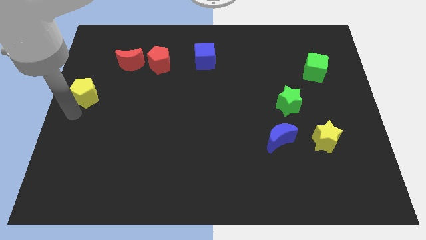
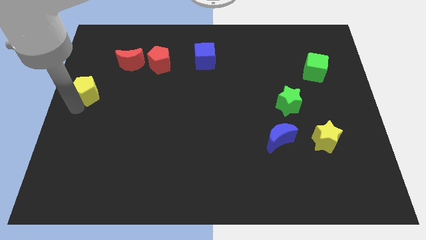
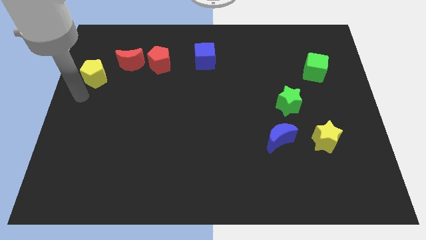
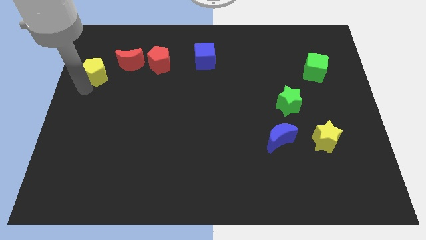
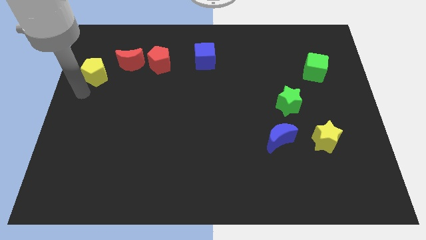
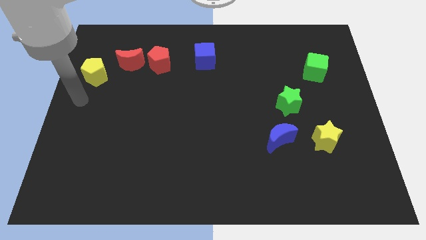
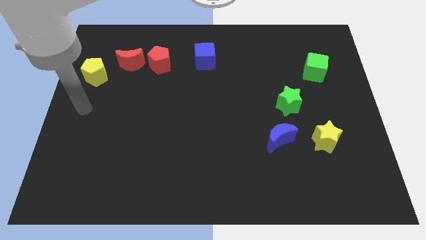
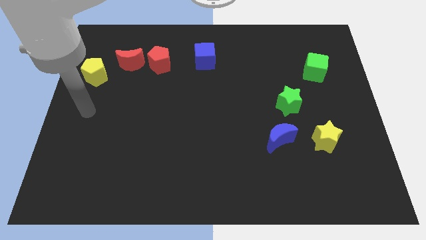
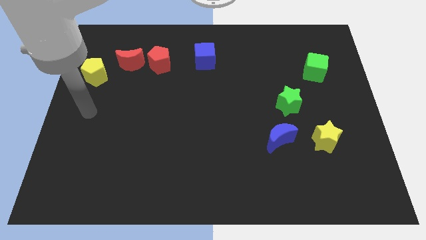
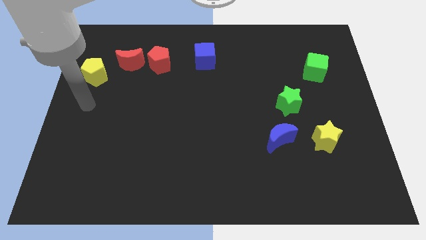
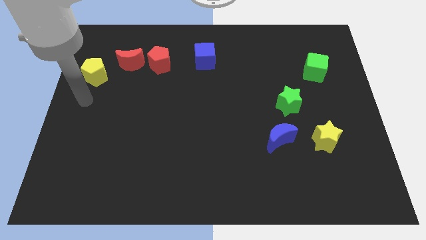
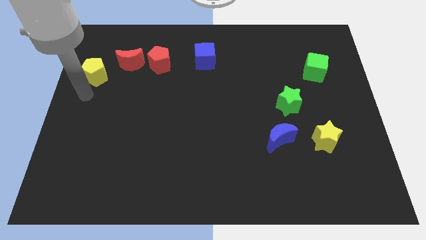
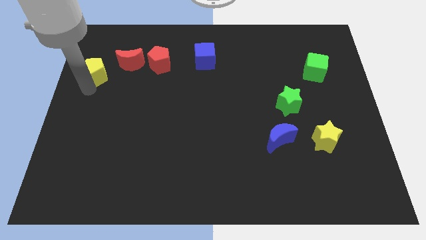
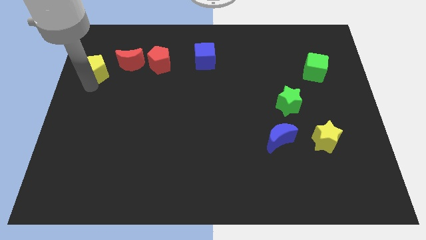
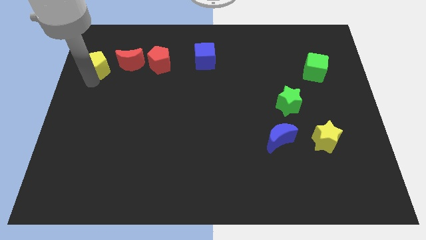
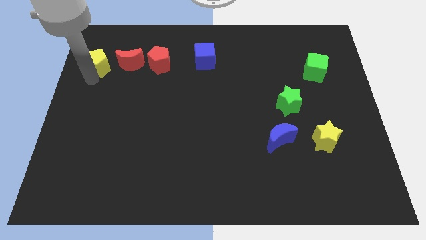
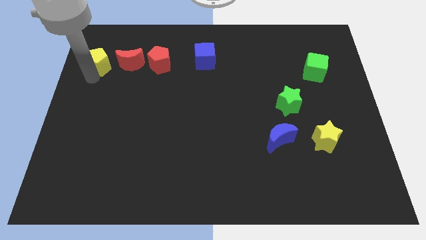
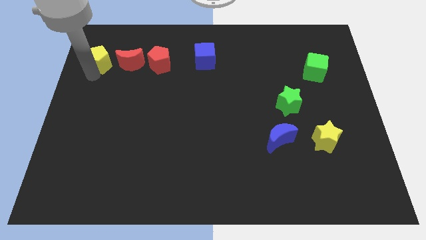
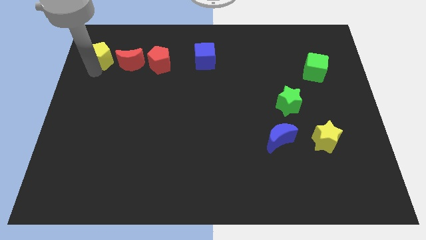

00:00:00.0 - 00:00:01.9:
push the yellow pentagon to the left of the red crescent

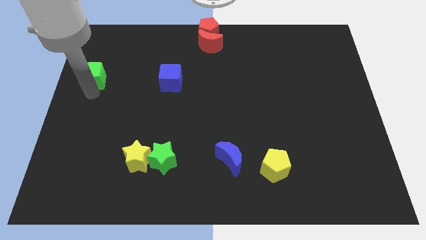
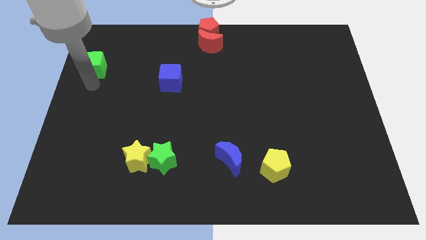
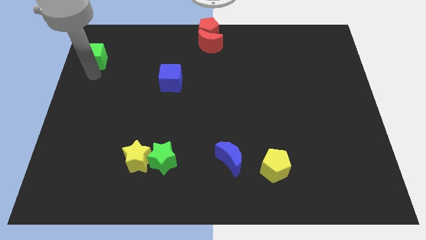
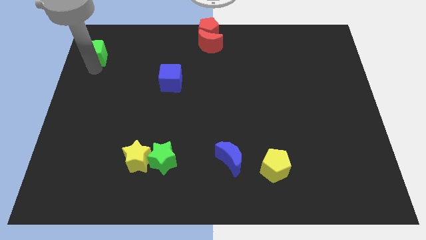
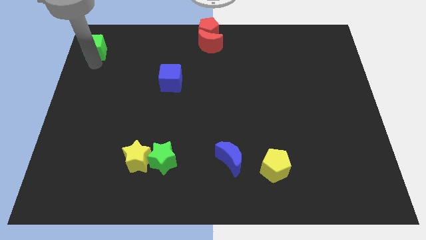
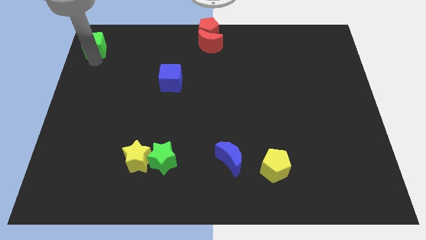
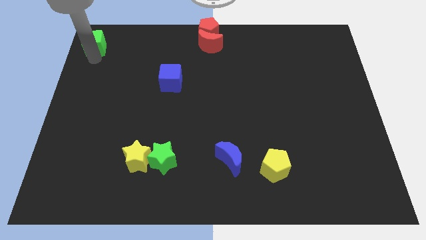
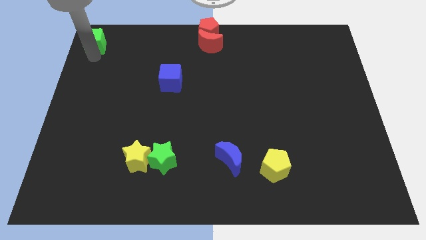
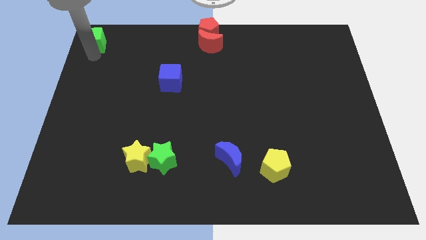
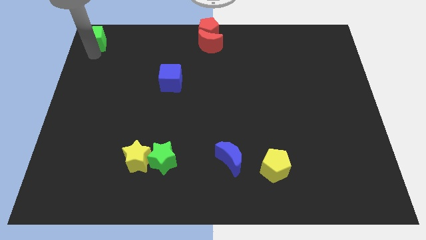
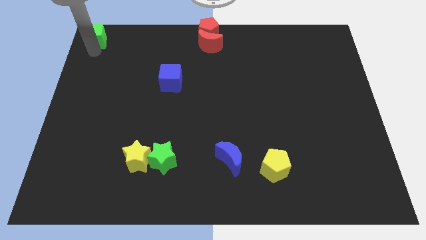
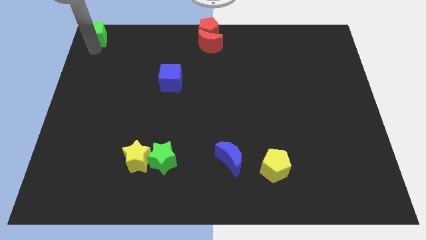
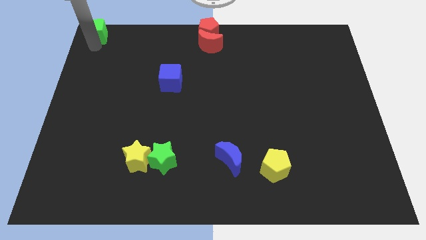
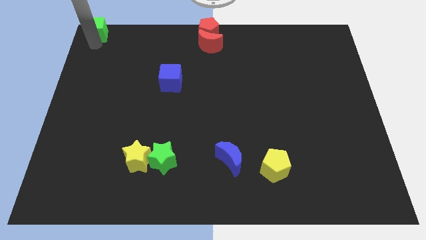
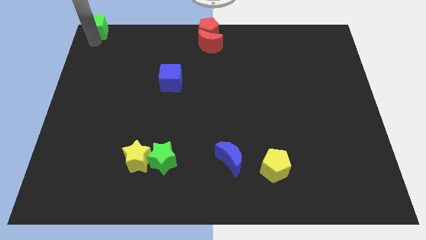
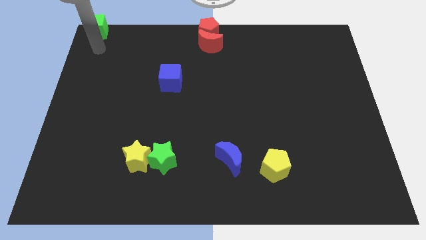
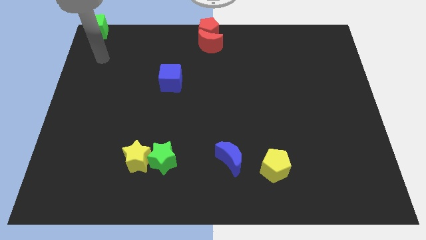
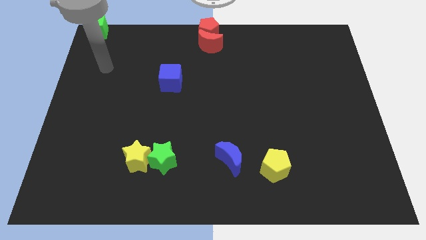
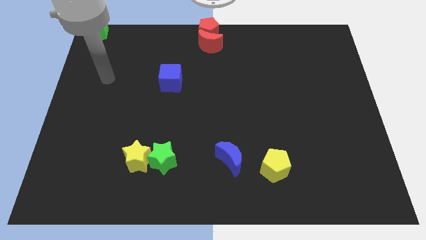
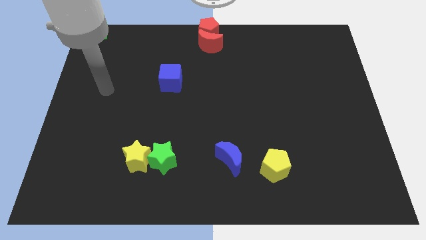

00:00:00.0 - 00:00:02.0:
move the green cube to the top left corner

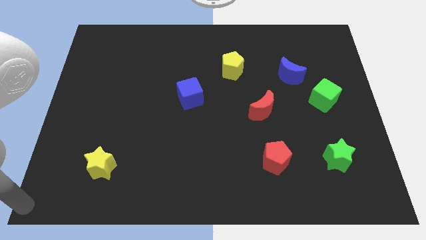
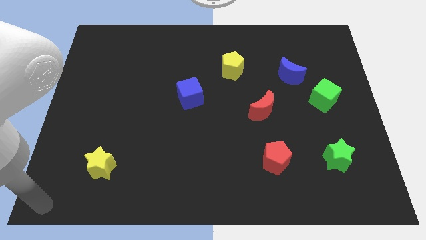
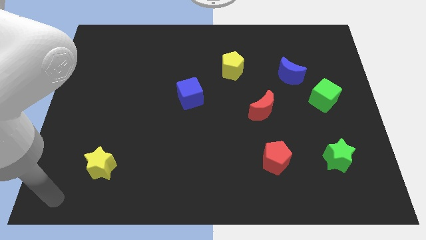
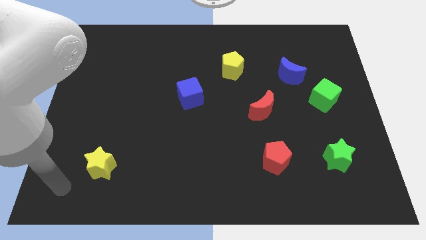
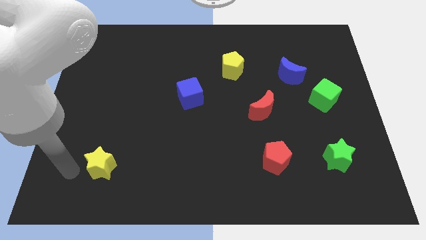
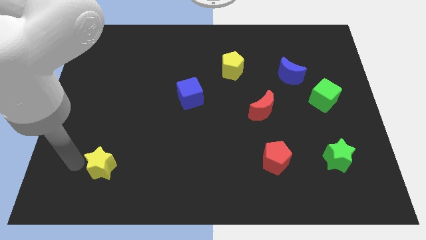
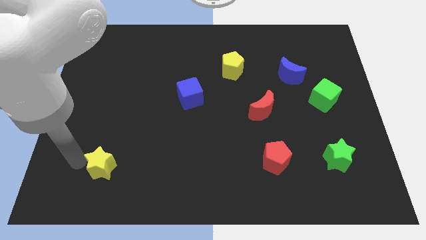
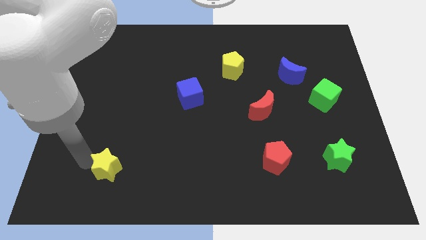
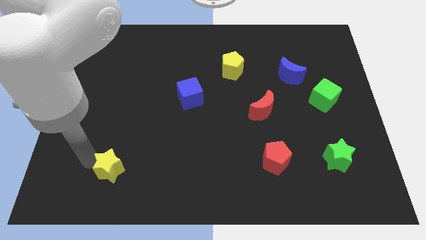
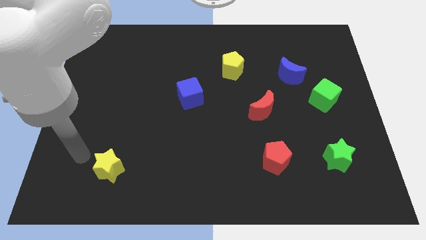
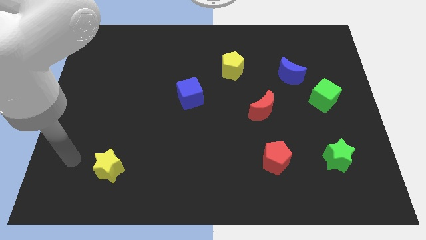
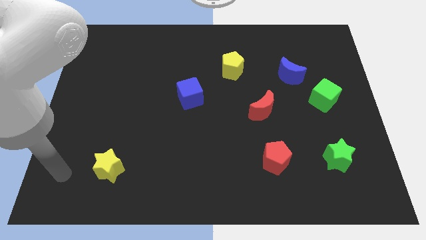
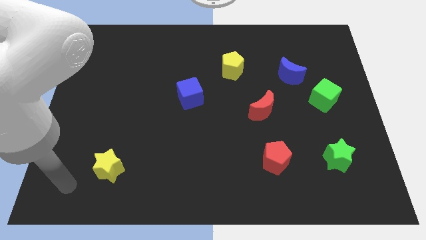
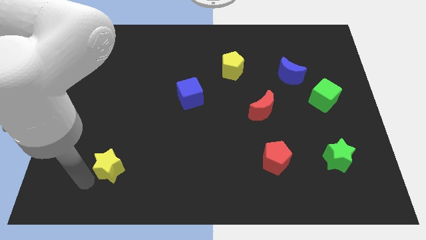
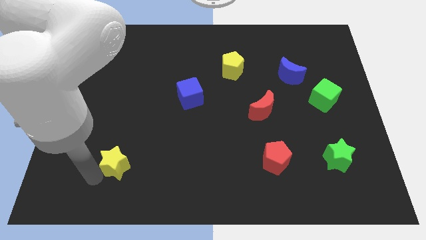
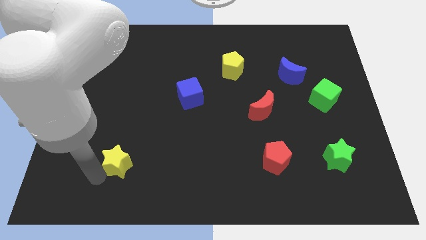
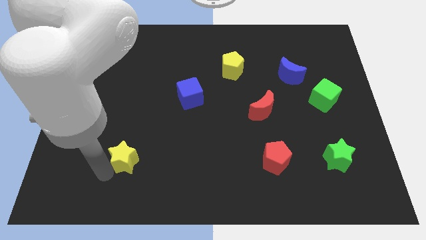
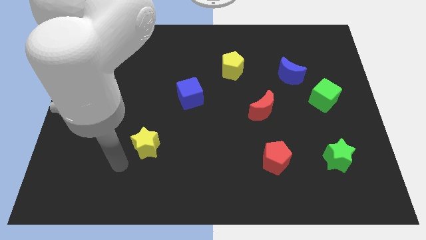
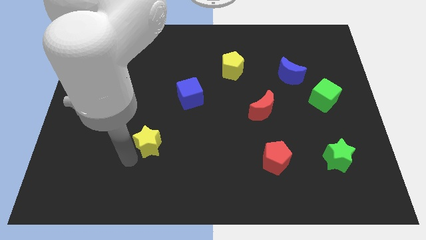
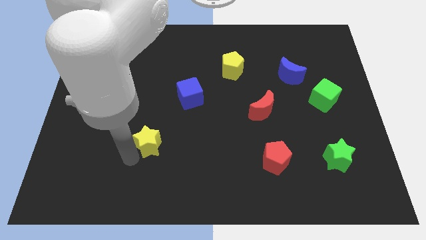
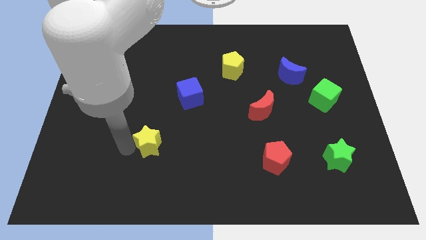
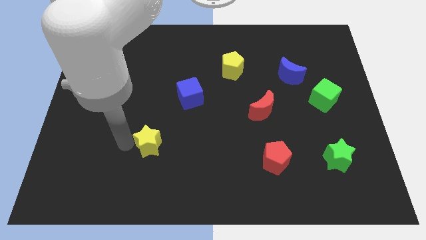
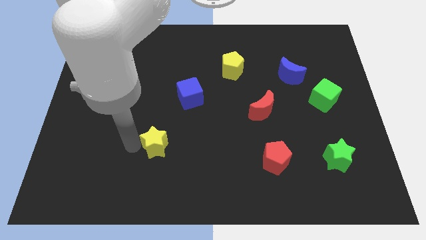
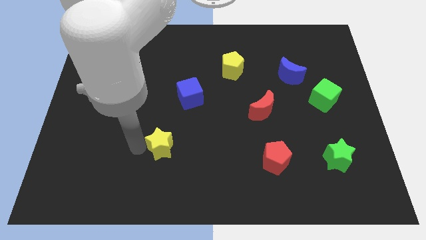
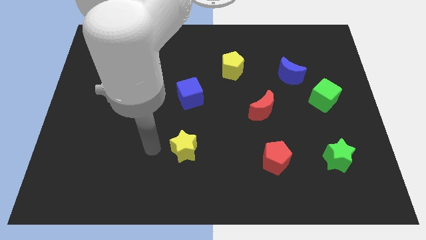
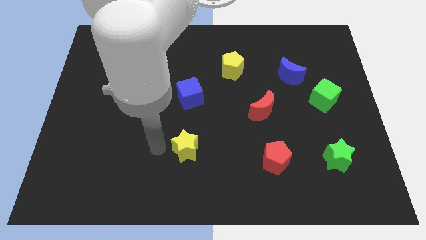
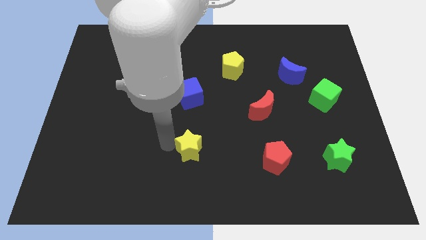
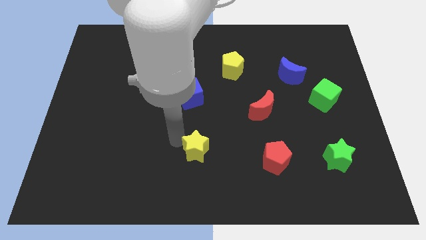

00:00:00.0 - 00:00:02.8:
push the yellow star towards center

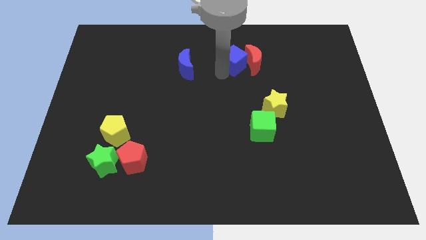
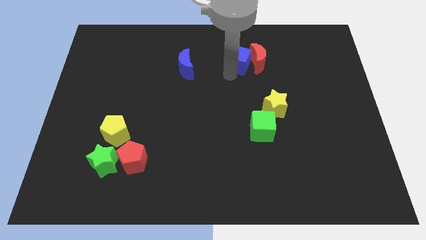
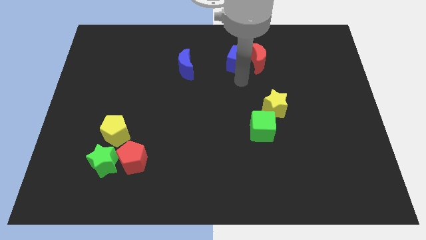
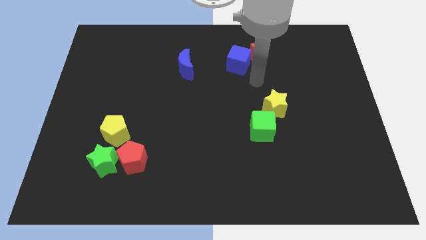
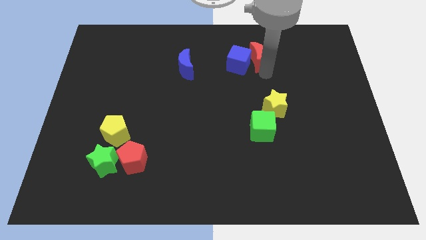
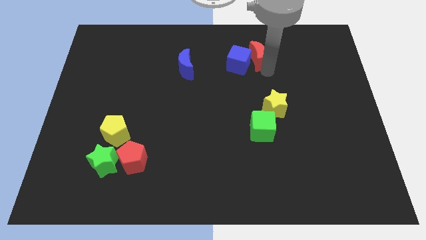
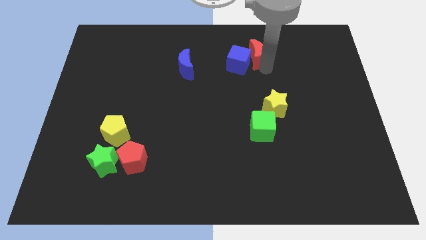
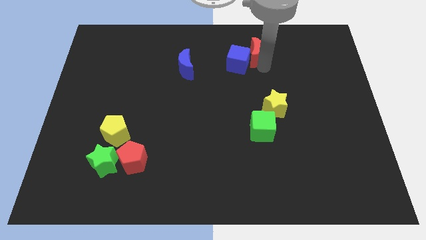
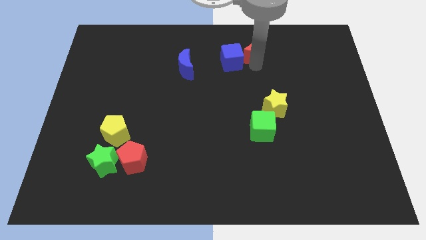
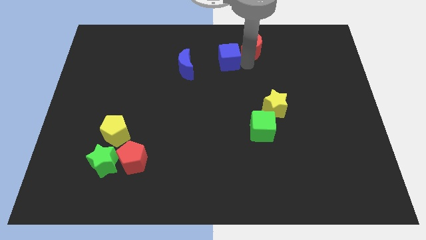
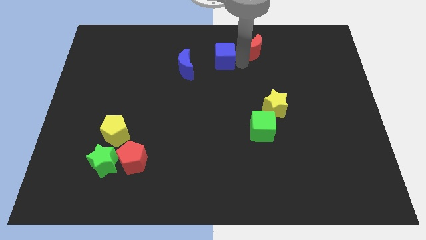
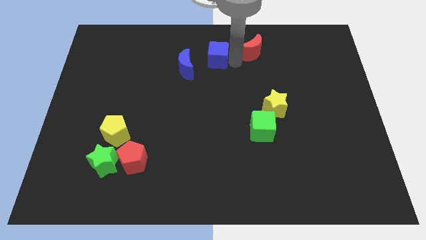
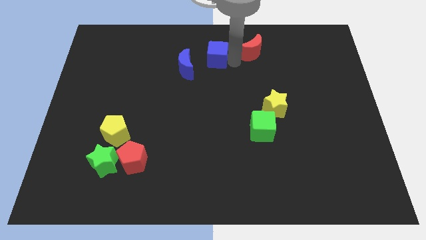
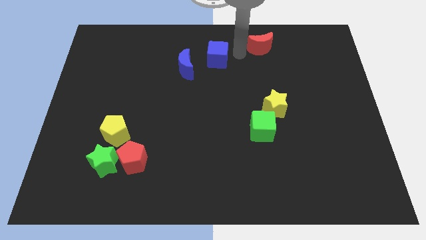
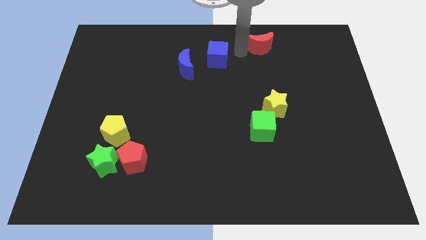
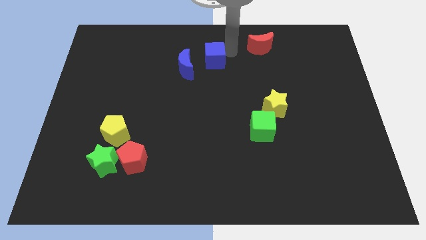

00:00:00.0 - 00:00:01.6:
separate the blue cube and red crescent from each other

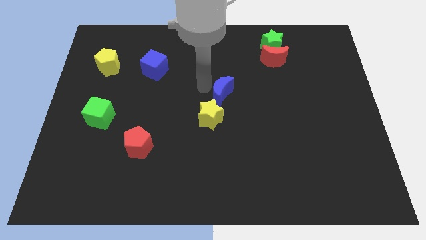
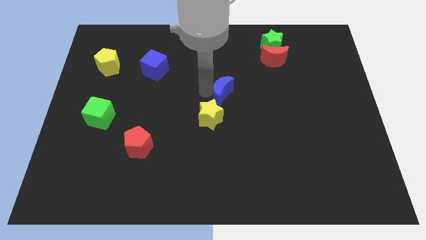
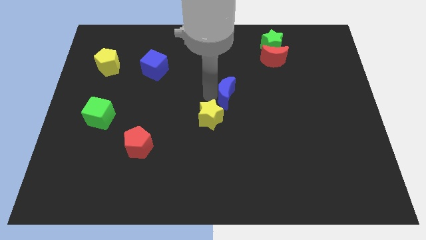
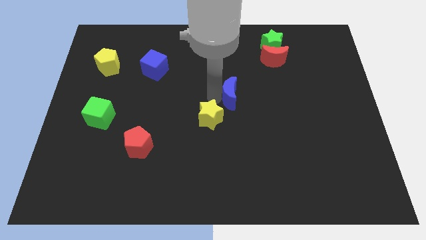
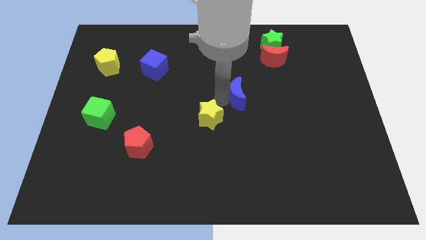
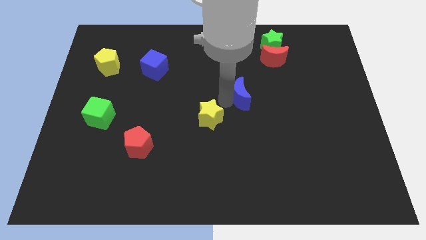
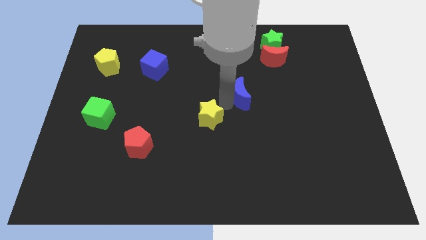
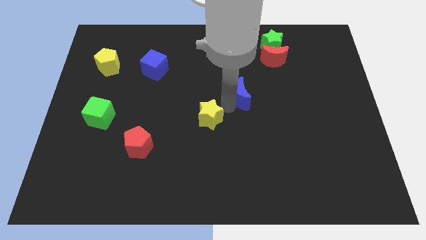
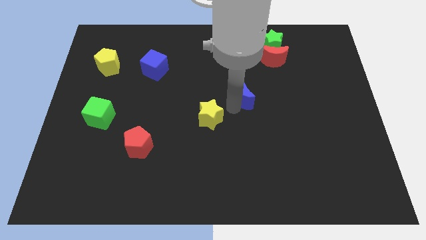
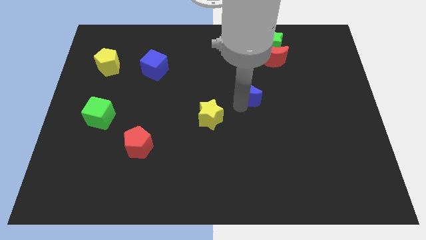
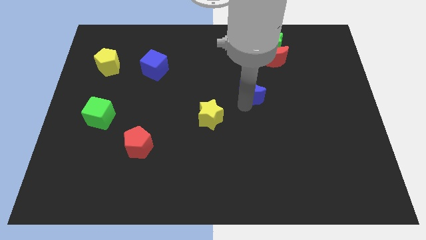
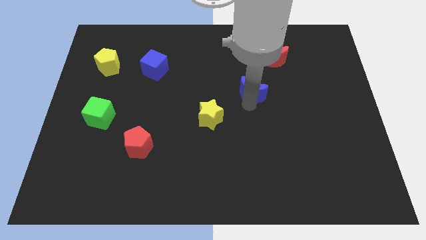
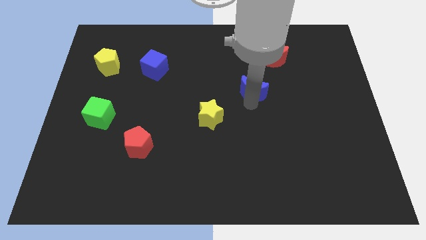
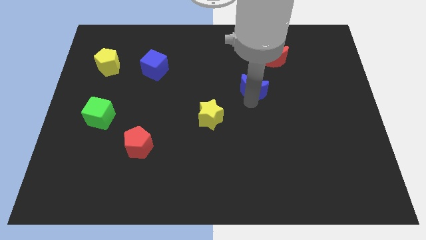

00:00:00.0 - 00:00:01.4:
separate the blue crescent from the yellow star
